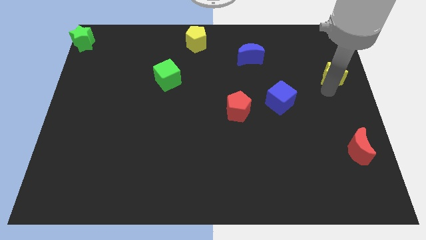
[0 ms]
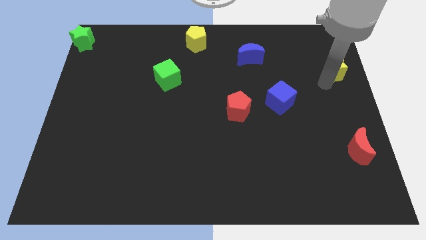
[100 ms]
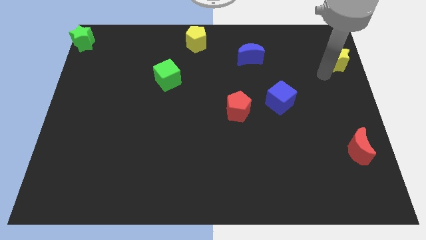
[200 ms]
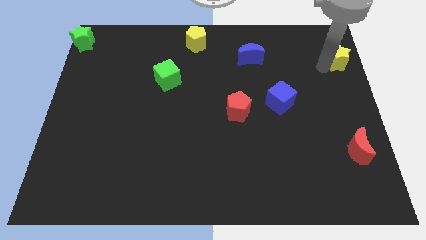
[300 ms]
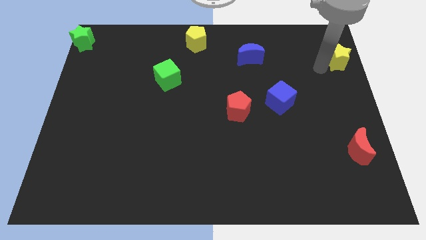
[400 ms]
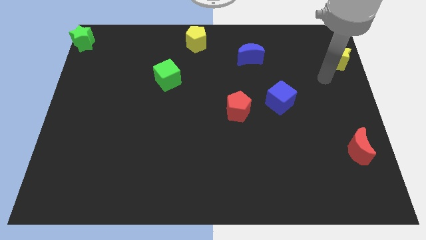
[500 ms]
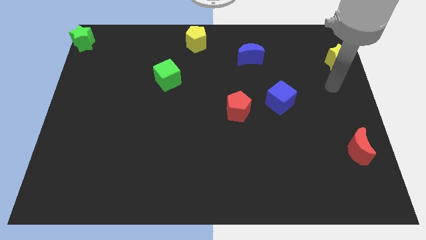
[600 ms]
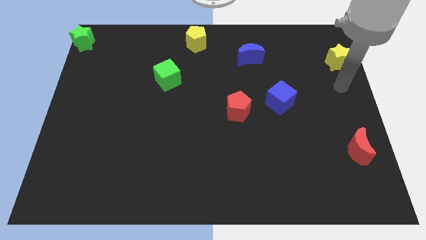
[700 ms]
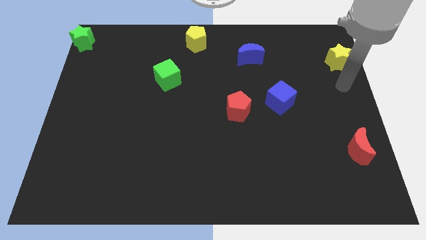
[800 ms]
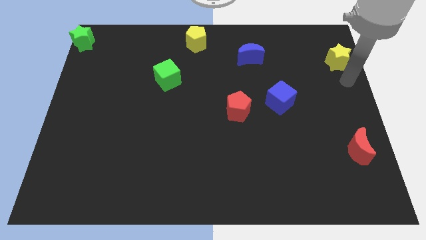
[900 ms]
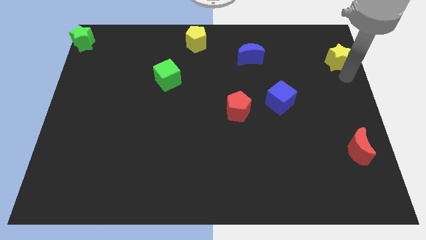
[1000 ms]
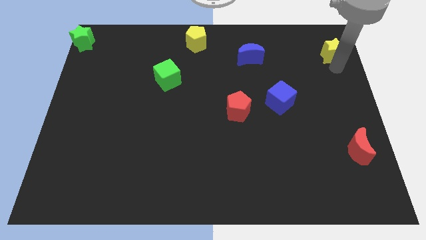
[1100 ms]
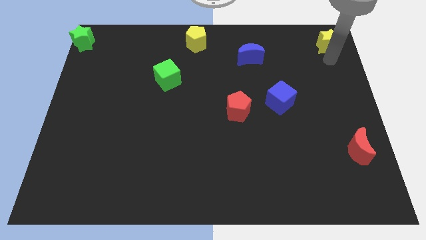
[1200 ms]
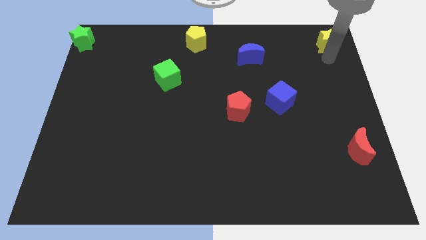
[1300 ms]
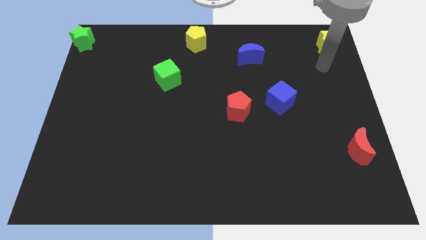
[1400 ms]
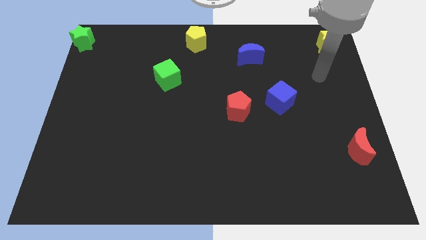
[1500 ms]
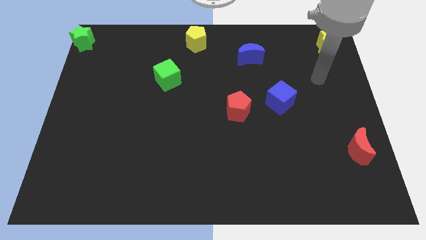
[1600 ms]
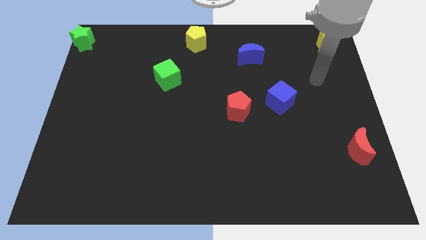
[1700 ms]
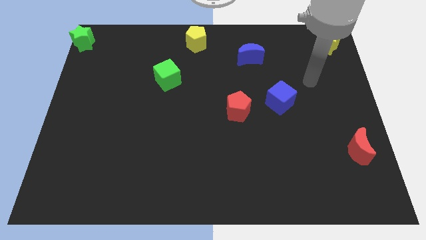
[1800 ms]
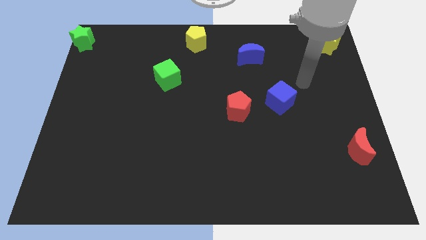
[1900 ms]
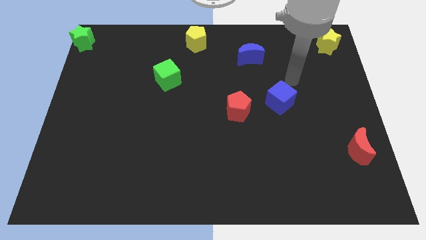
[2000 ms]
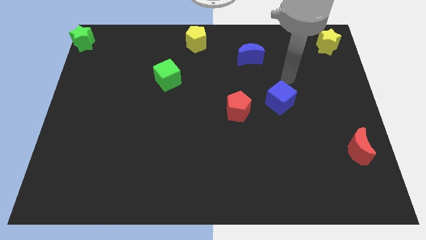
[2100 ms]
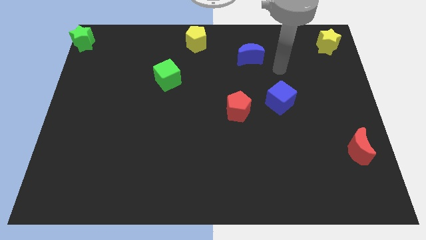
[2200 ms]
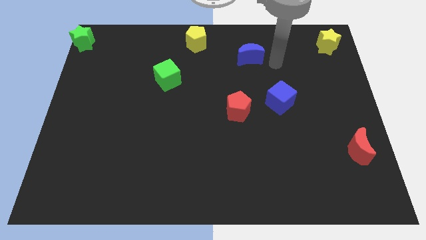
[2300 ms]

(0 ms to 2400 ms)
place the yellow star to the top right corner

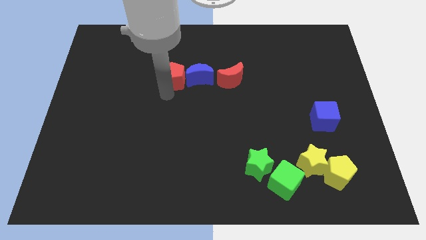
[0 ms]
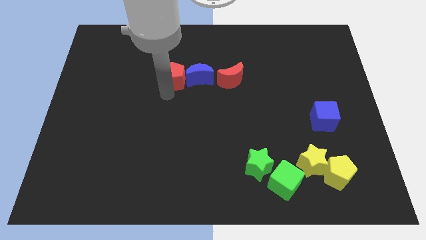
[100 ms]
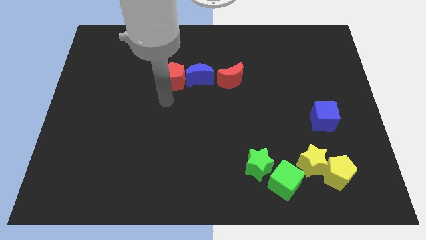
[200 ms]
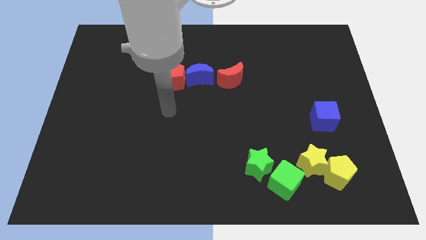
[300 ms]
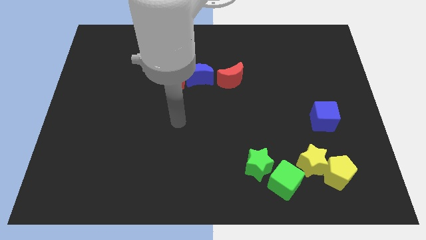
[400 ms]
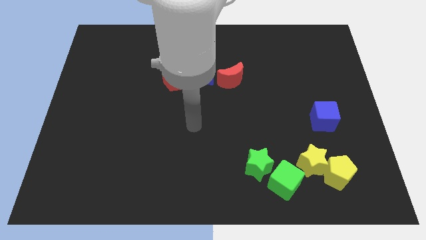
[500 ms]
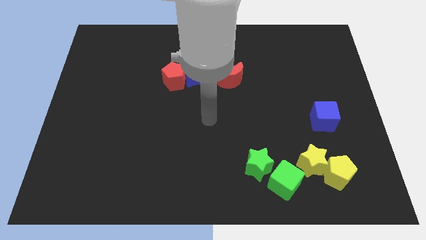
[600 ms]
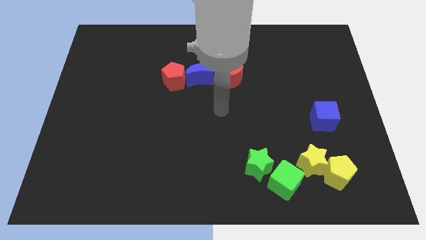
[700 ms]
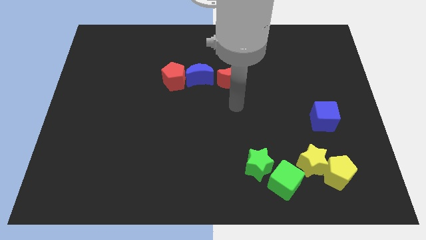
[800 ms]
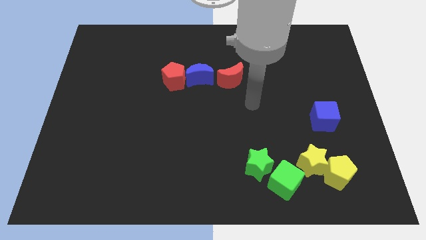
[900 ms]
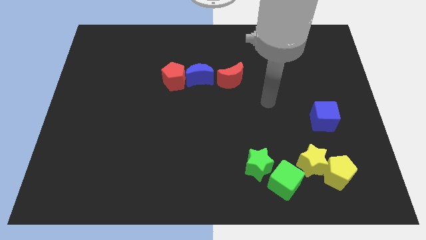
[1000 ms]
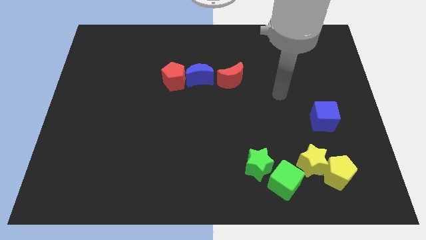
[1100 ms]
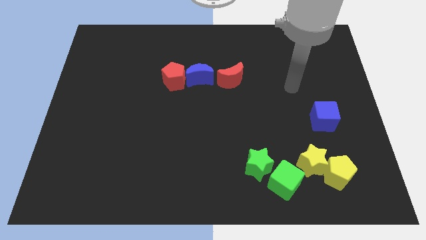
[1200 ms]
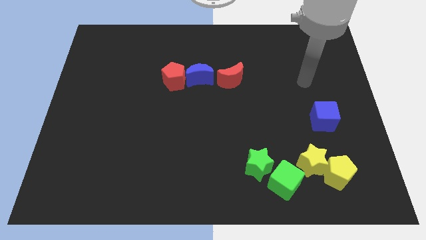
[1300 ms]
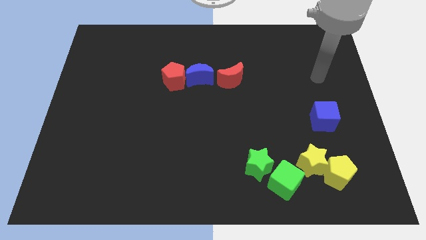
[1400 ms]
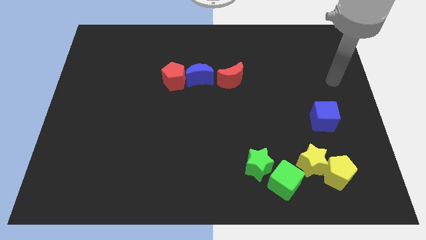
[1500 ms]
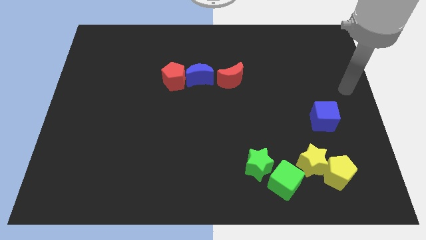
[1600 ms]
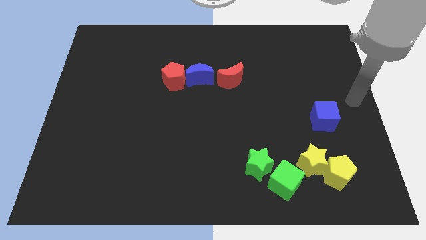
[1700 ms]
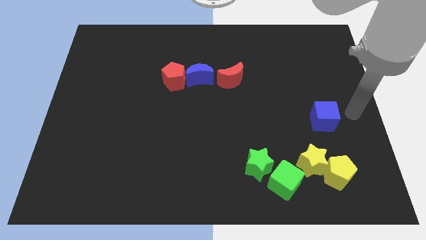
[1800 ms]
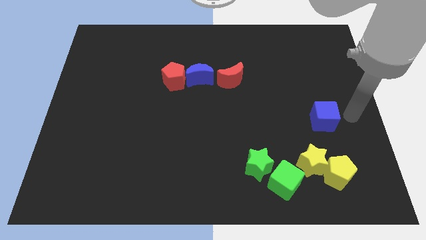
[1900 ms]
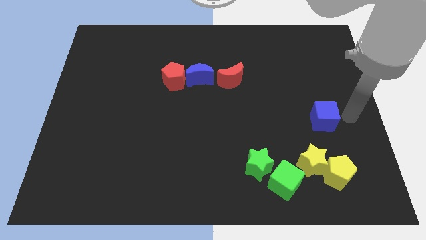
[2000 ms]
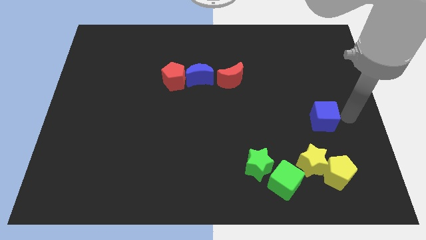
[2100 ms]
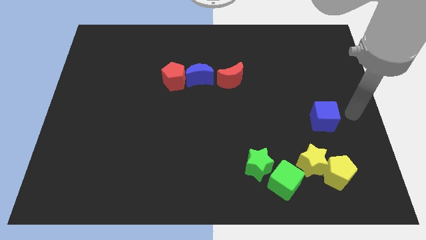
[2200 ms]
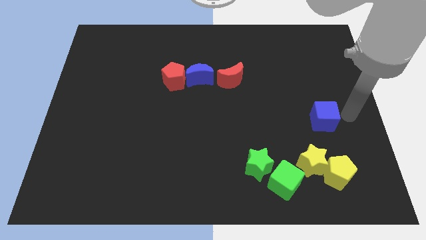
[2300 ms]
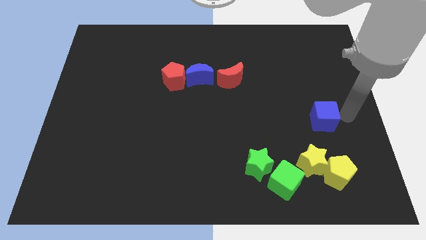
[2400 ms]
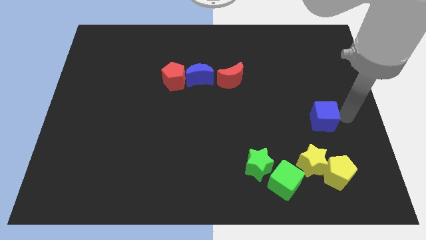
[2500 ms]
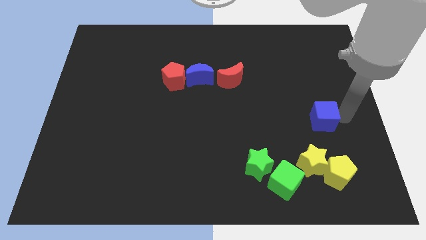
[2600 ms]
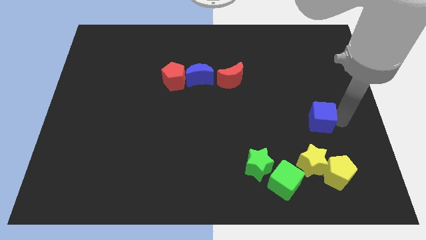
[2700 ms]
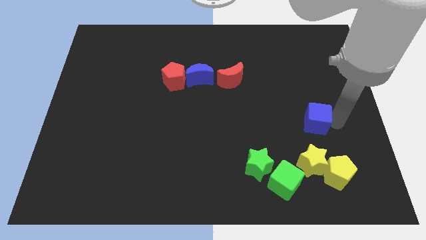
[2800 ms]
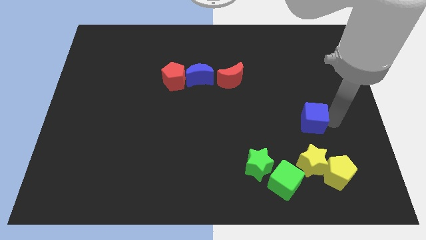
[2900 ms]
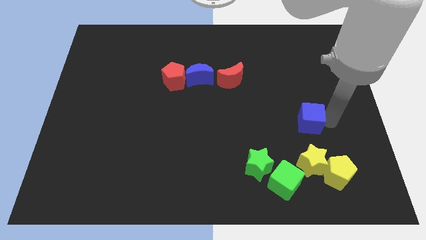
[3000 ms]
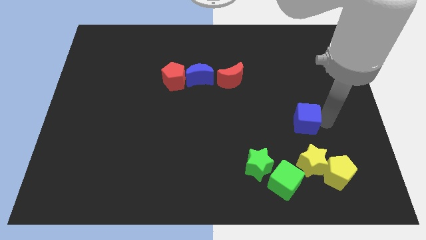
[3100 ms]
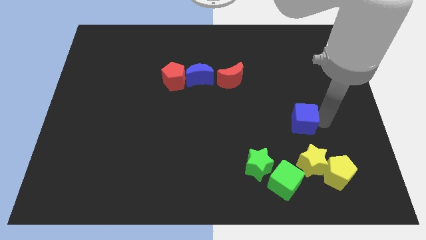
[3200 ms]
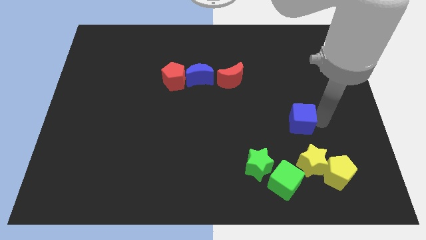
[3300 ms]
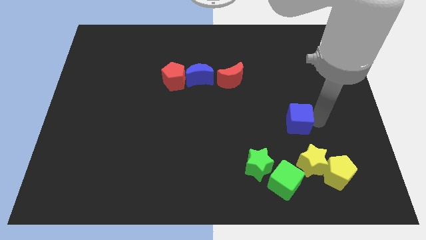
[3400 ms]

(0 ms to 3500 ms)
slide the blue cube to the top of the yellow star

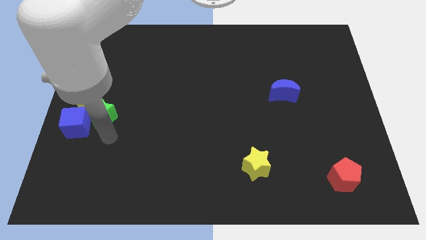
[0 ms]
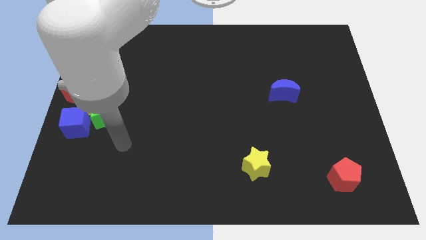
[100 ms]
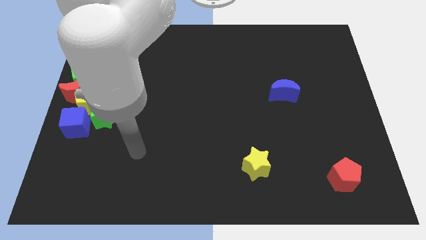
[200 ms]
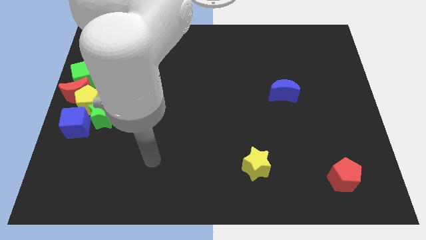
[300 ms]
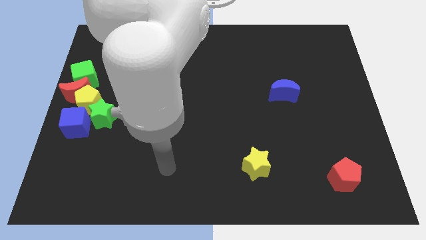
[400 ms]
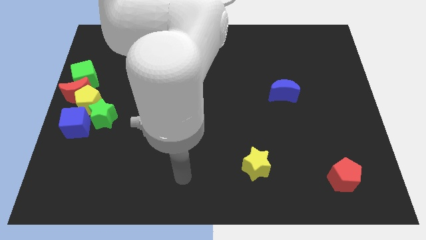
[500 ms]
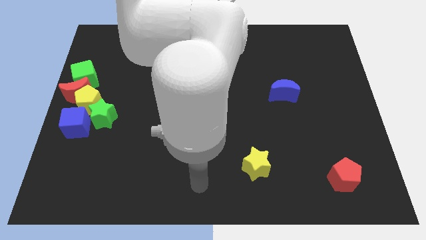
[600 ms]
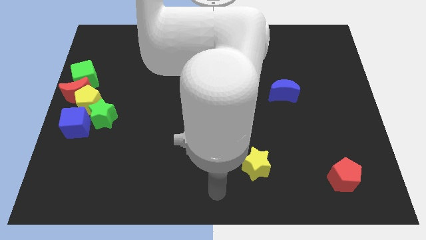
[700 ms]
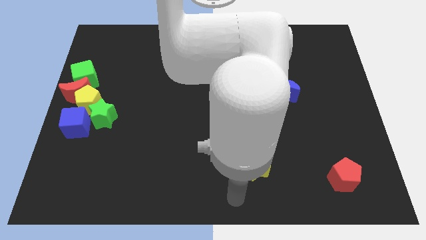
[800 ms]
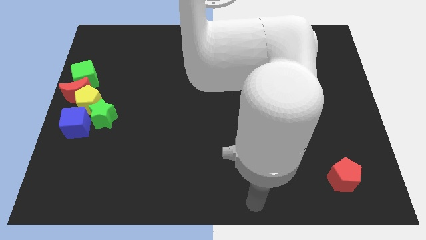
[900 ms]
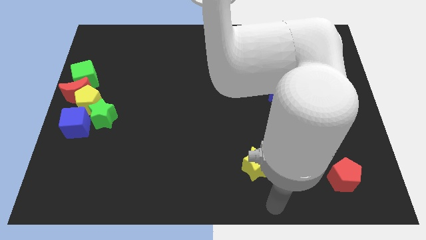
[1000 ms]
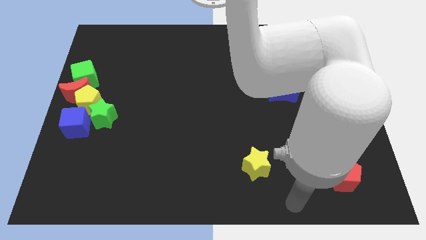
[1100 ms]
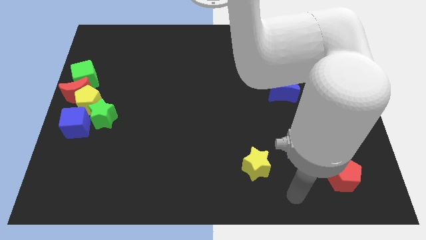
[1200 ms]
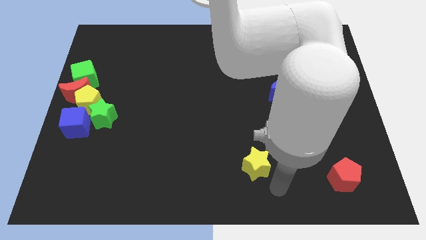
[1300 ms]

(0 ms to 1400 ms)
move your arm away from blue cube

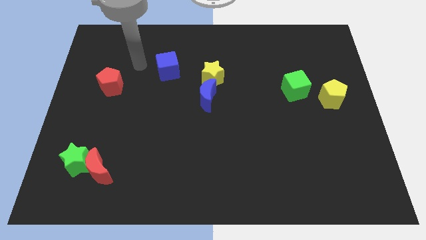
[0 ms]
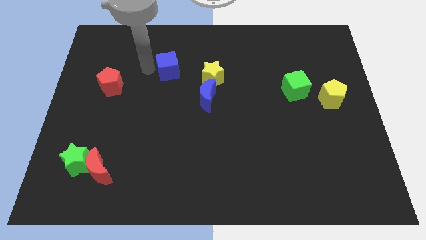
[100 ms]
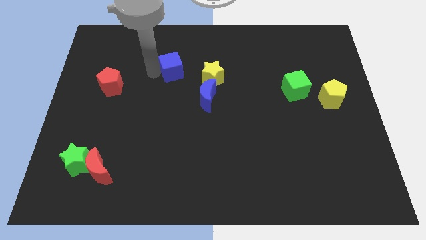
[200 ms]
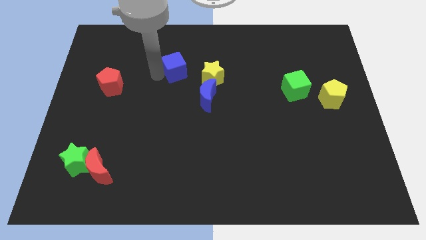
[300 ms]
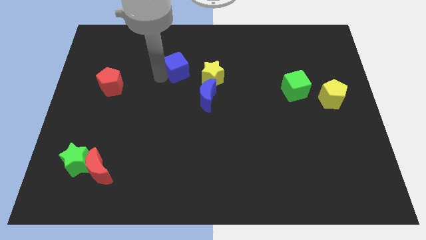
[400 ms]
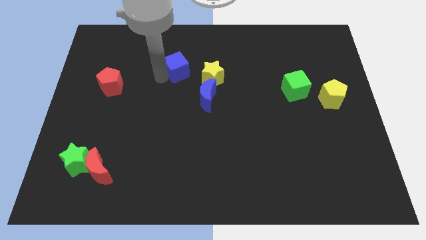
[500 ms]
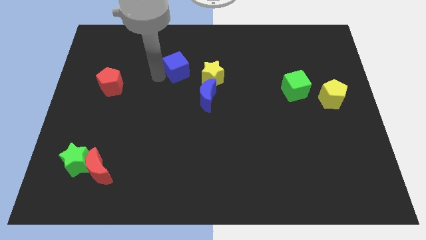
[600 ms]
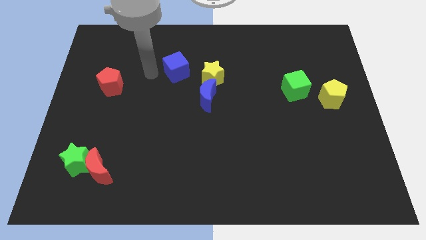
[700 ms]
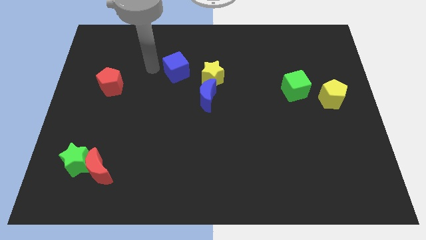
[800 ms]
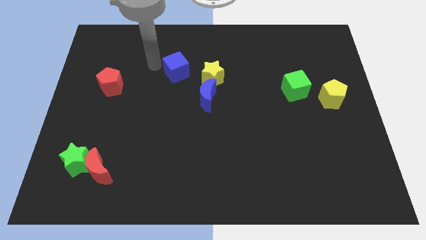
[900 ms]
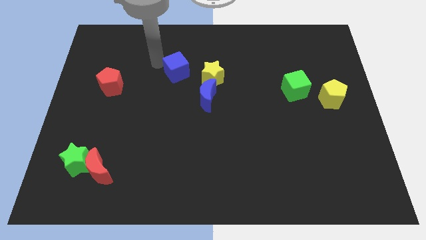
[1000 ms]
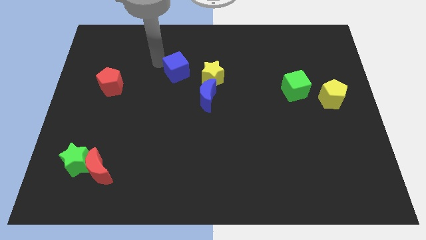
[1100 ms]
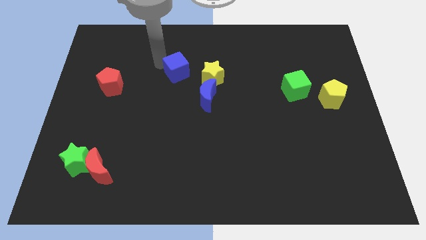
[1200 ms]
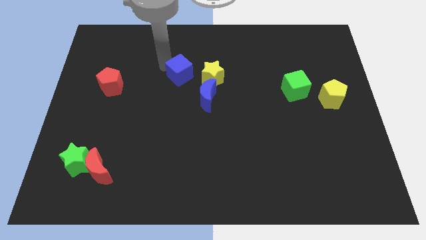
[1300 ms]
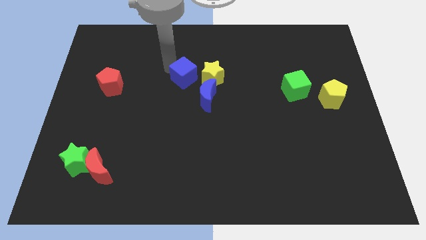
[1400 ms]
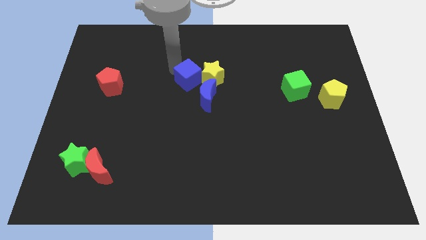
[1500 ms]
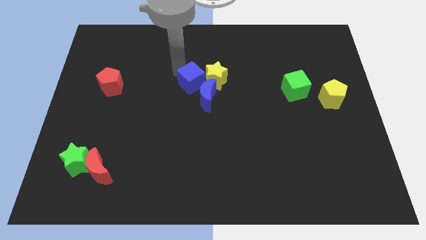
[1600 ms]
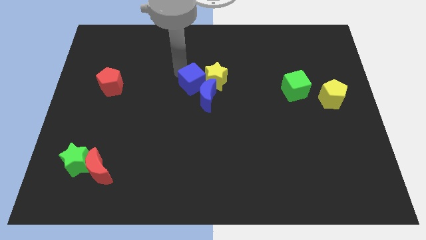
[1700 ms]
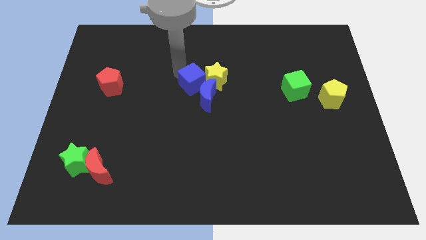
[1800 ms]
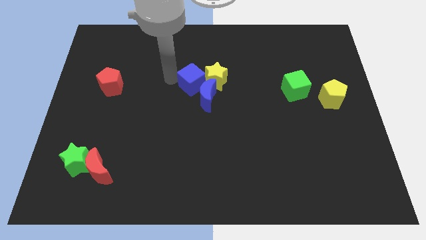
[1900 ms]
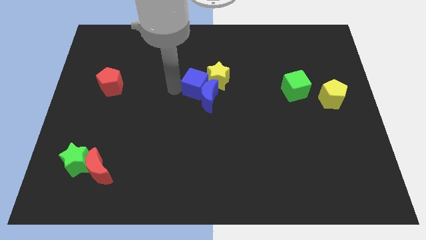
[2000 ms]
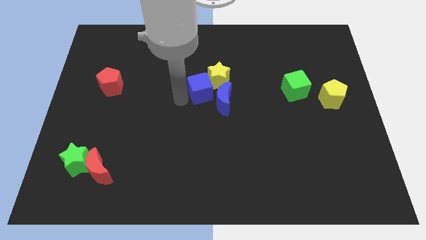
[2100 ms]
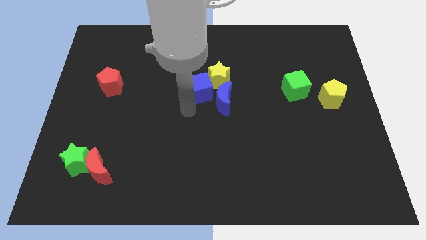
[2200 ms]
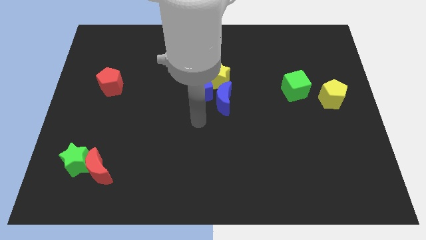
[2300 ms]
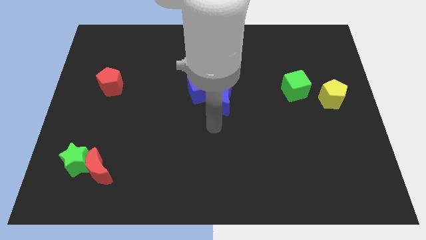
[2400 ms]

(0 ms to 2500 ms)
push the blue cube into the yellow star
